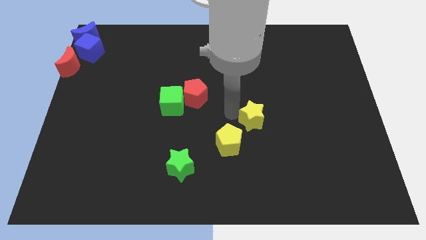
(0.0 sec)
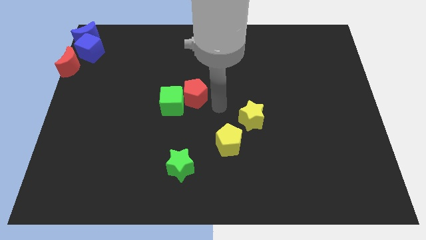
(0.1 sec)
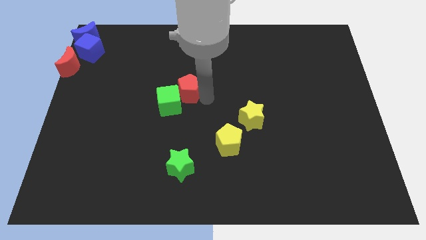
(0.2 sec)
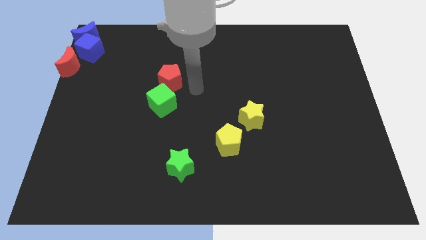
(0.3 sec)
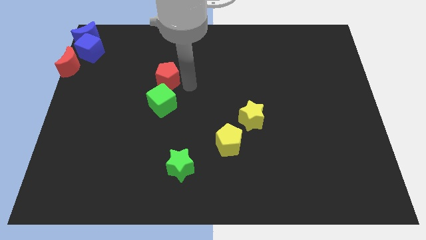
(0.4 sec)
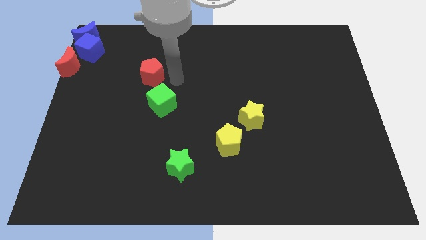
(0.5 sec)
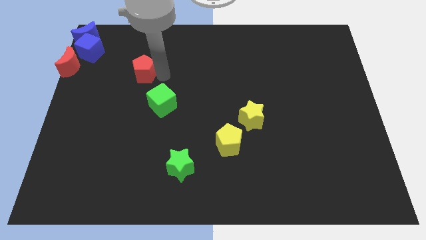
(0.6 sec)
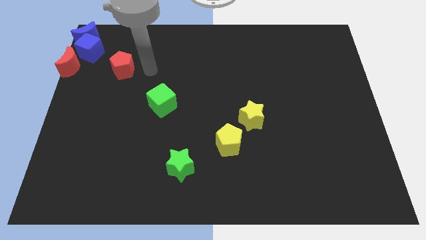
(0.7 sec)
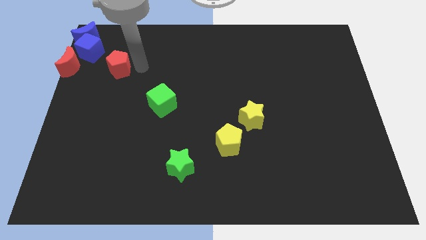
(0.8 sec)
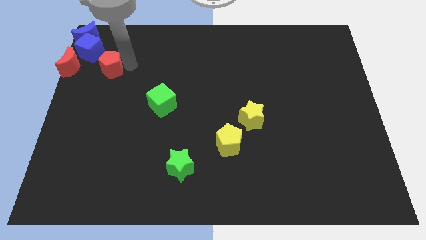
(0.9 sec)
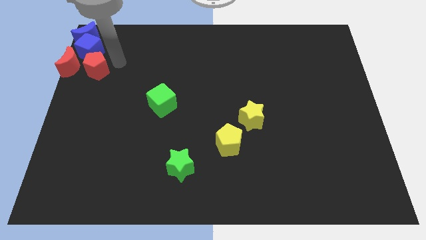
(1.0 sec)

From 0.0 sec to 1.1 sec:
separate the red pentagon from green cube

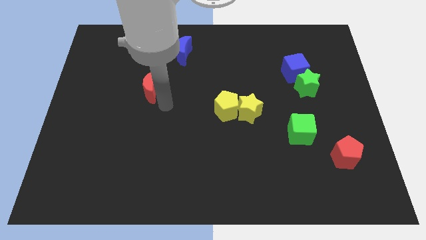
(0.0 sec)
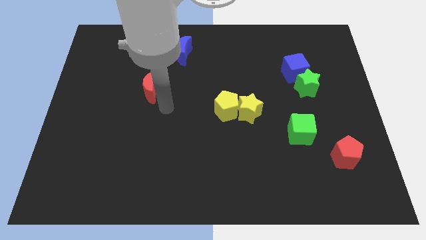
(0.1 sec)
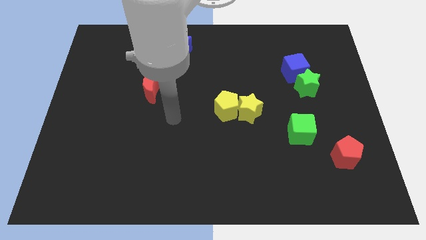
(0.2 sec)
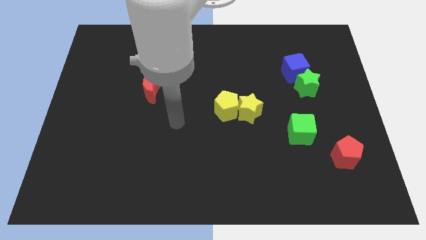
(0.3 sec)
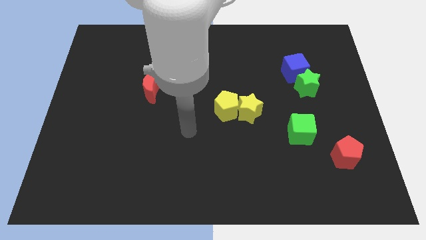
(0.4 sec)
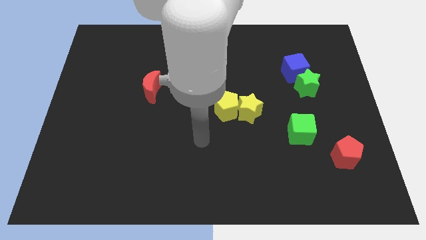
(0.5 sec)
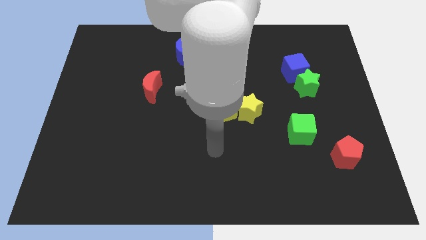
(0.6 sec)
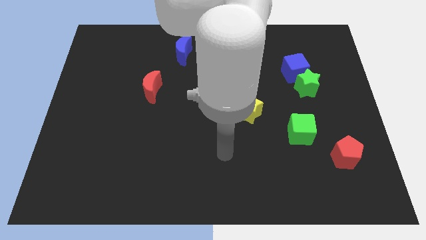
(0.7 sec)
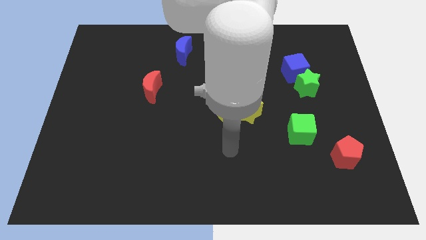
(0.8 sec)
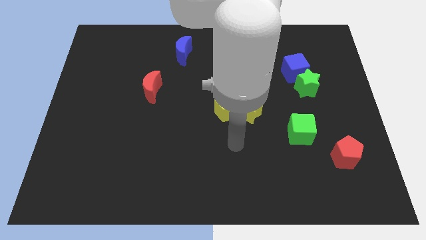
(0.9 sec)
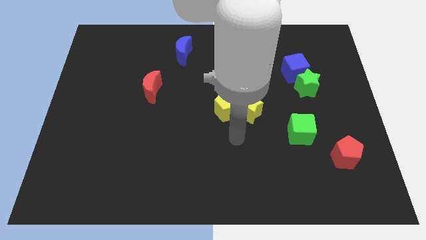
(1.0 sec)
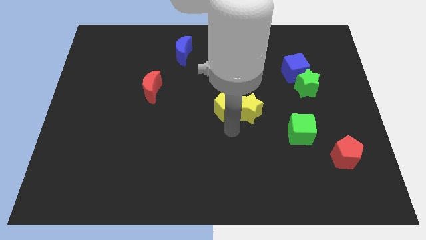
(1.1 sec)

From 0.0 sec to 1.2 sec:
move your arm away from red crescent

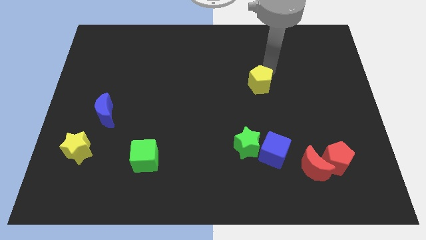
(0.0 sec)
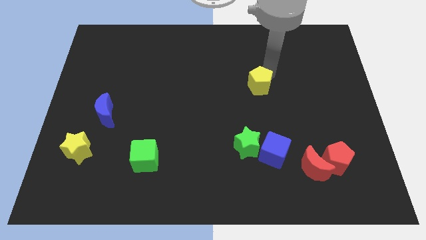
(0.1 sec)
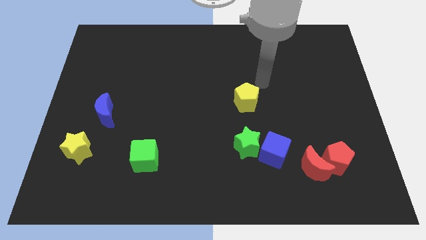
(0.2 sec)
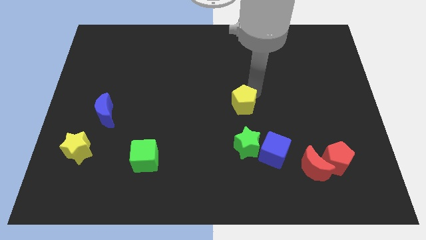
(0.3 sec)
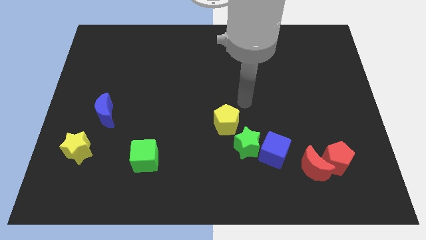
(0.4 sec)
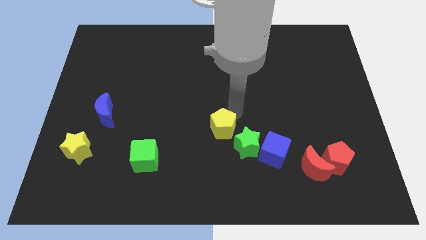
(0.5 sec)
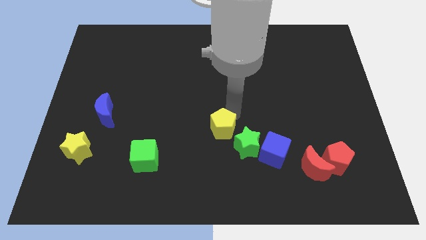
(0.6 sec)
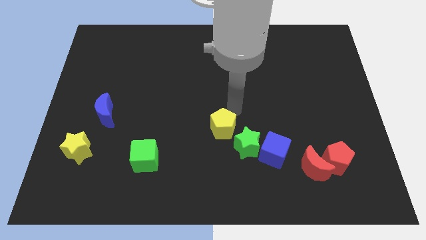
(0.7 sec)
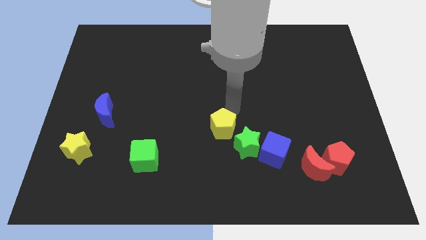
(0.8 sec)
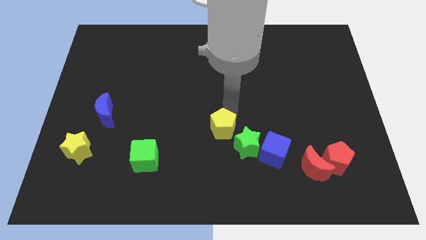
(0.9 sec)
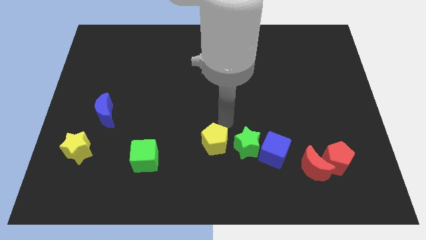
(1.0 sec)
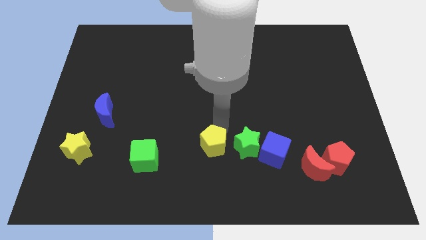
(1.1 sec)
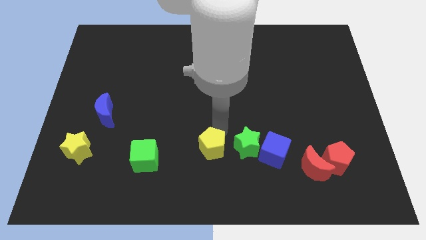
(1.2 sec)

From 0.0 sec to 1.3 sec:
slide the yellow pentagon left to the green star

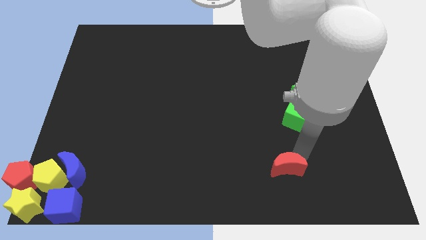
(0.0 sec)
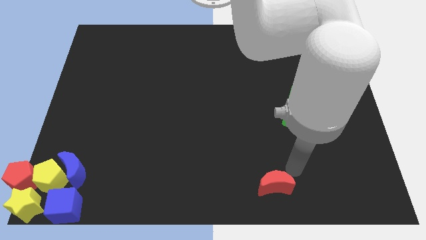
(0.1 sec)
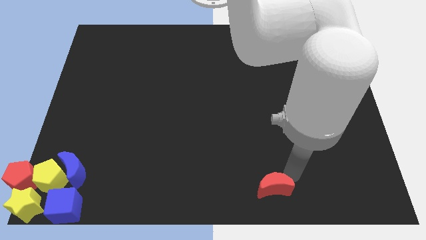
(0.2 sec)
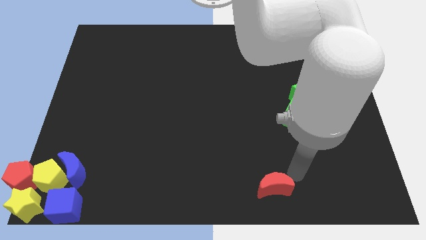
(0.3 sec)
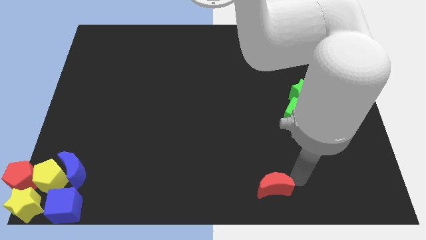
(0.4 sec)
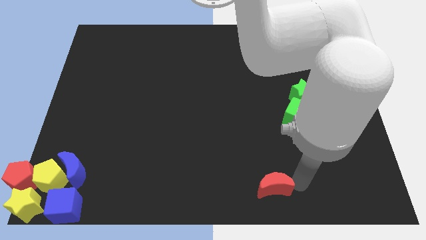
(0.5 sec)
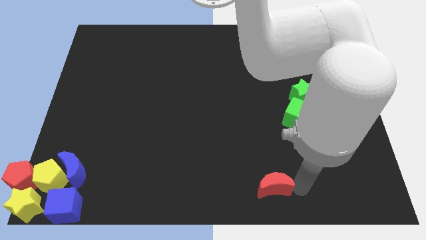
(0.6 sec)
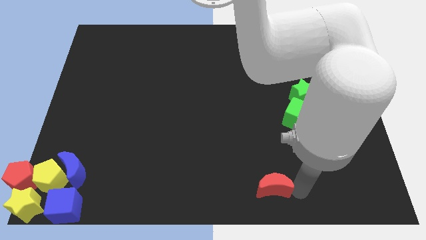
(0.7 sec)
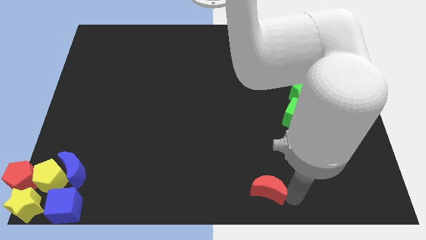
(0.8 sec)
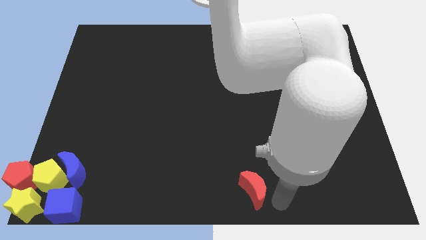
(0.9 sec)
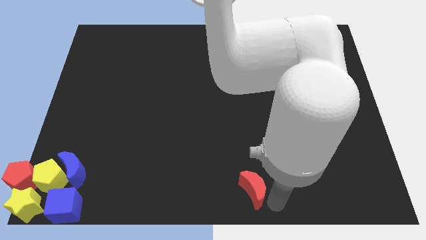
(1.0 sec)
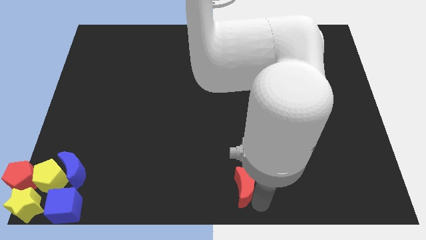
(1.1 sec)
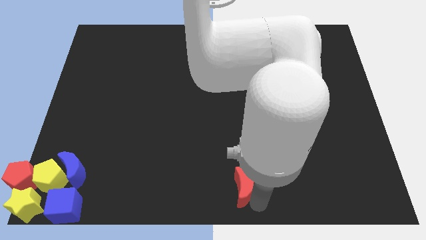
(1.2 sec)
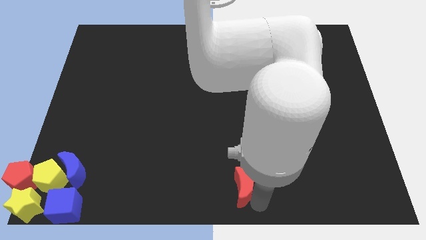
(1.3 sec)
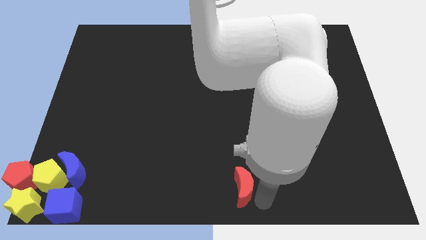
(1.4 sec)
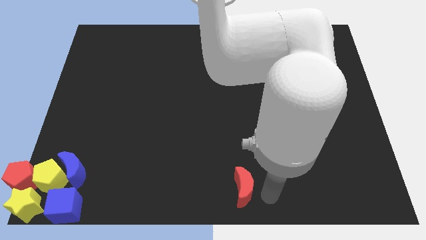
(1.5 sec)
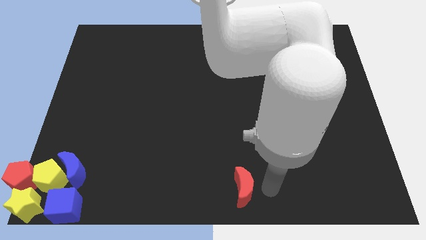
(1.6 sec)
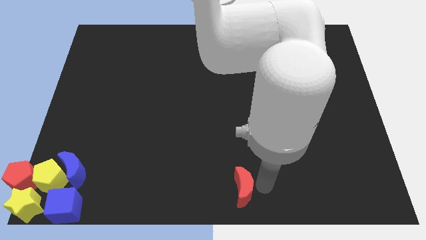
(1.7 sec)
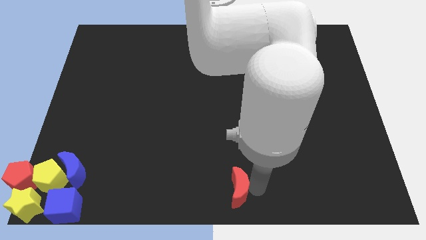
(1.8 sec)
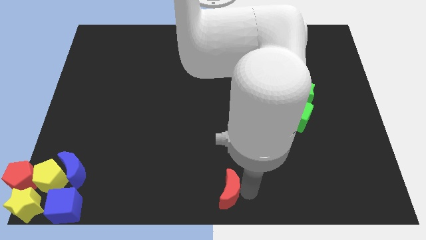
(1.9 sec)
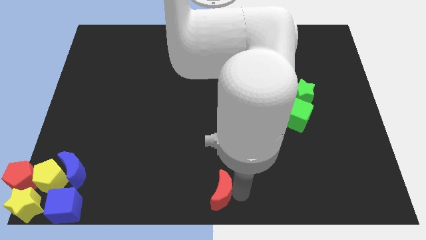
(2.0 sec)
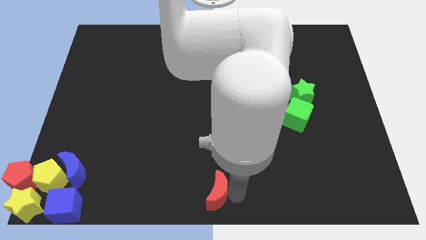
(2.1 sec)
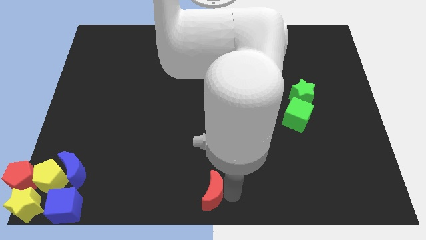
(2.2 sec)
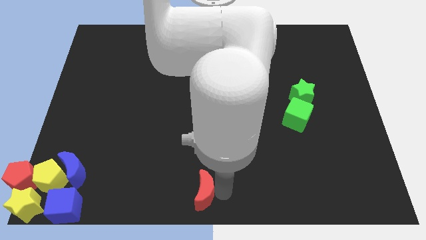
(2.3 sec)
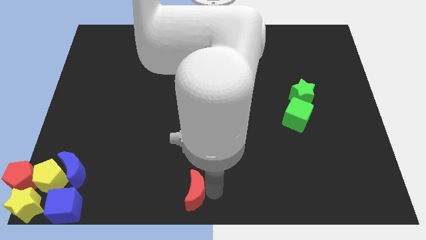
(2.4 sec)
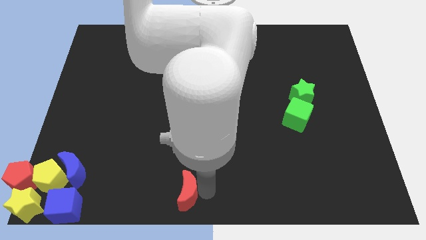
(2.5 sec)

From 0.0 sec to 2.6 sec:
push the red moon to the bottom center of the board

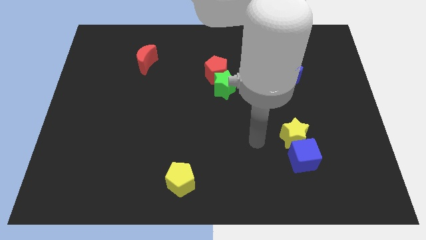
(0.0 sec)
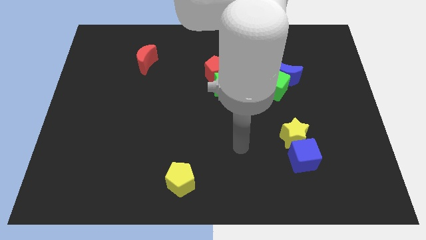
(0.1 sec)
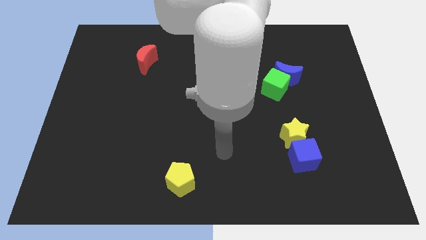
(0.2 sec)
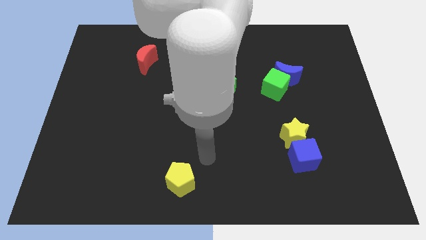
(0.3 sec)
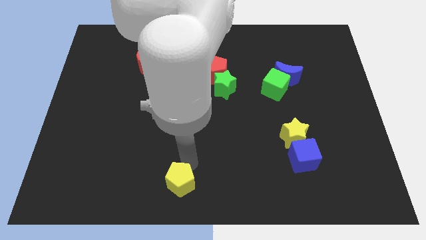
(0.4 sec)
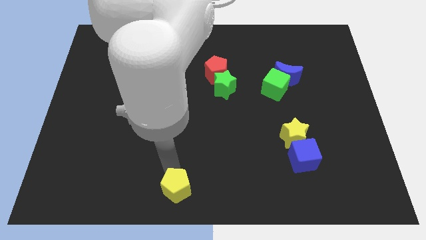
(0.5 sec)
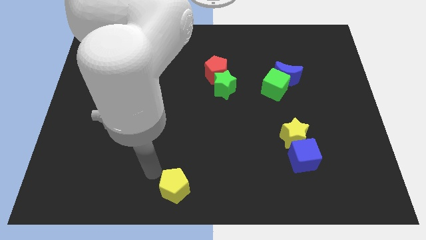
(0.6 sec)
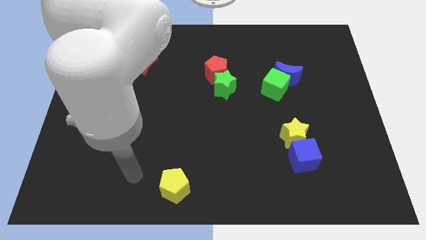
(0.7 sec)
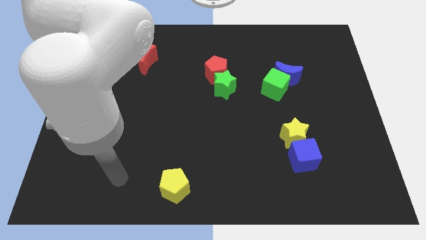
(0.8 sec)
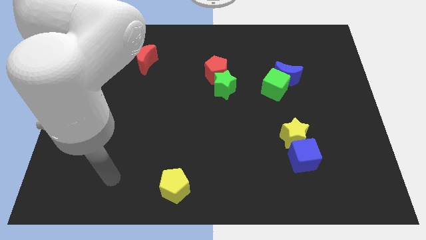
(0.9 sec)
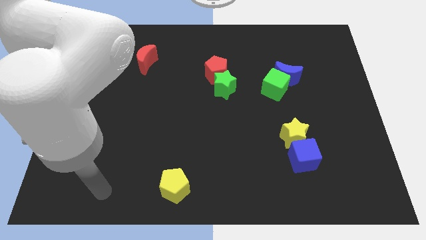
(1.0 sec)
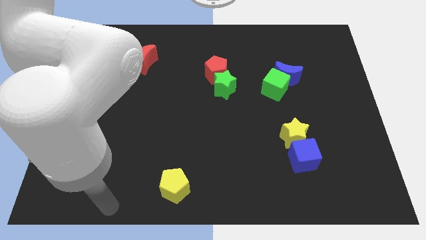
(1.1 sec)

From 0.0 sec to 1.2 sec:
move your arm towards the bottom left

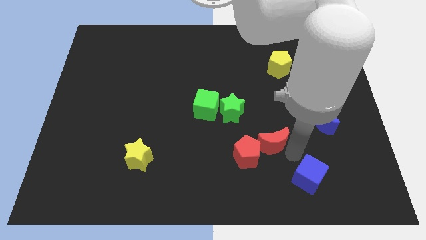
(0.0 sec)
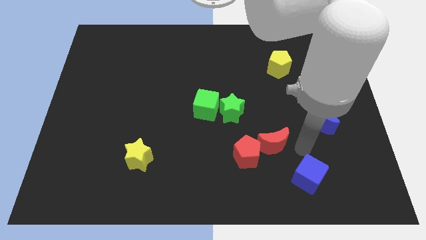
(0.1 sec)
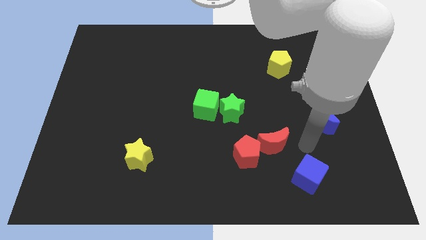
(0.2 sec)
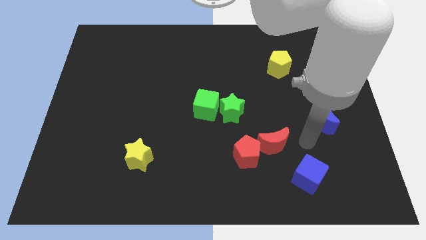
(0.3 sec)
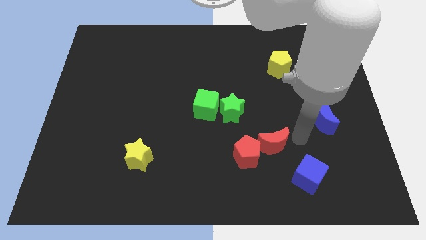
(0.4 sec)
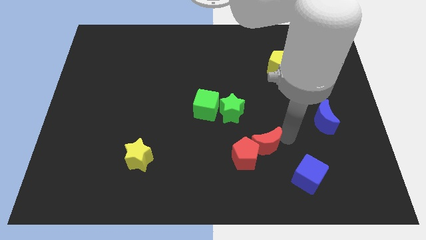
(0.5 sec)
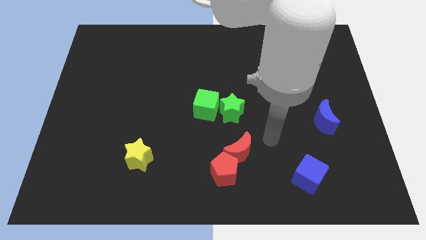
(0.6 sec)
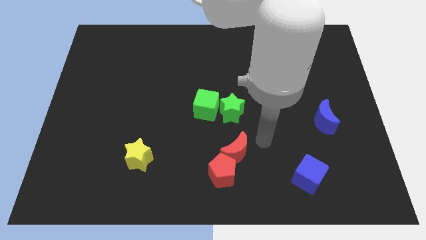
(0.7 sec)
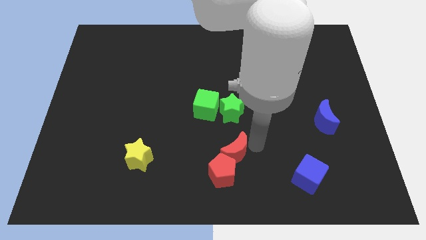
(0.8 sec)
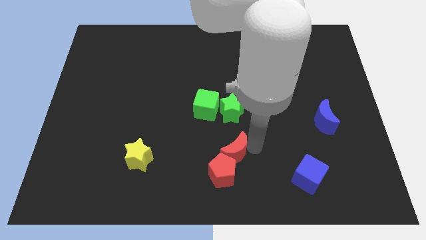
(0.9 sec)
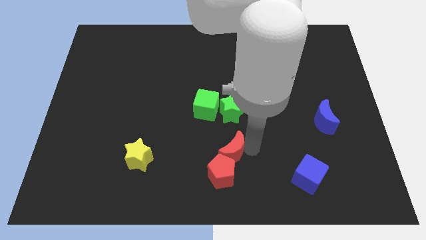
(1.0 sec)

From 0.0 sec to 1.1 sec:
push red blocks below the green star

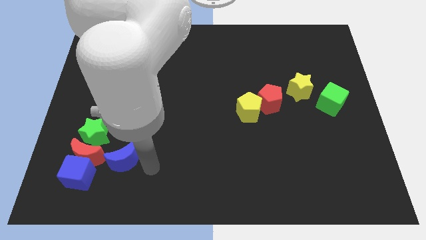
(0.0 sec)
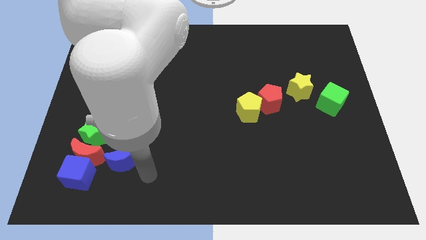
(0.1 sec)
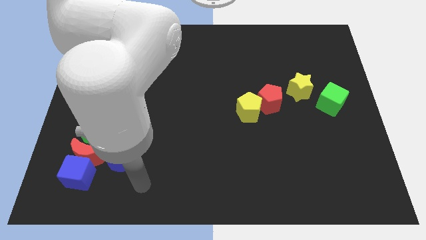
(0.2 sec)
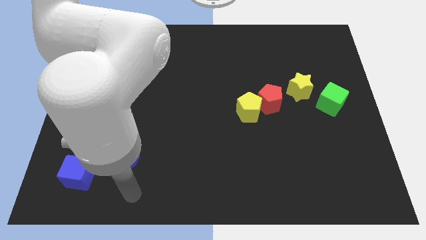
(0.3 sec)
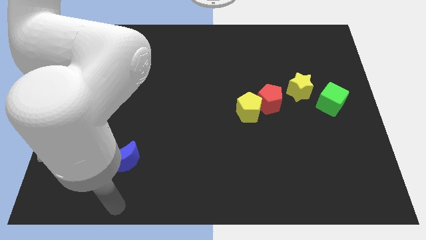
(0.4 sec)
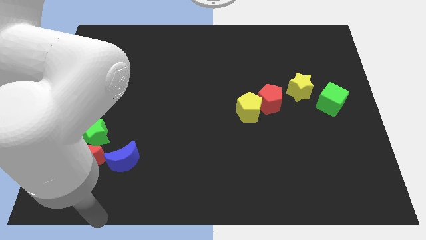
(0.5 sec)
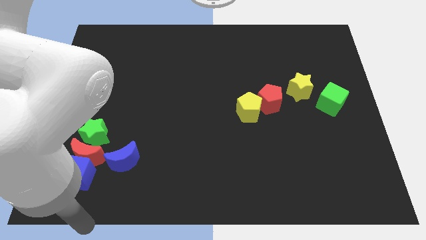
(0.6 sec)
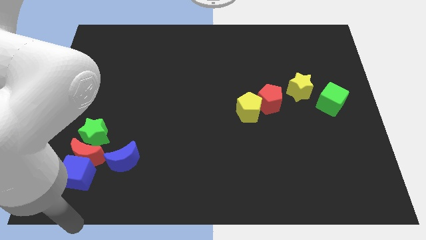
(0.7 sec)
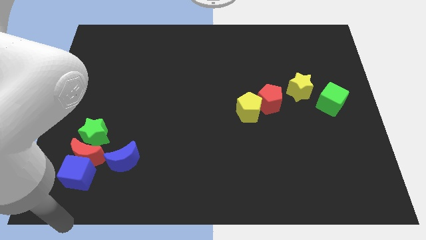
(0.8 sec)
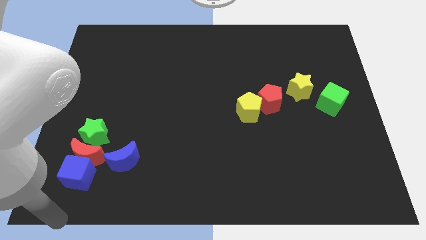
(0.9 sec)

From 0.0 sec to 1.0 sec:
move your arm below the blue cube
